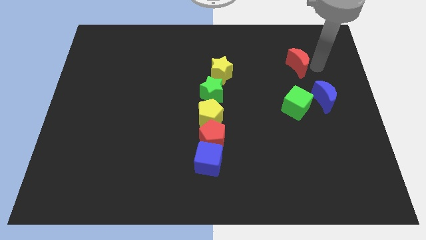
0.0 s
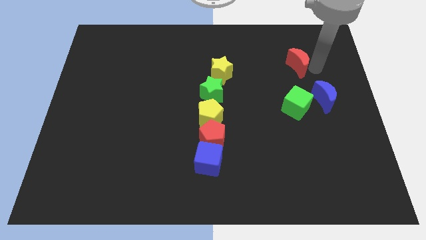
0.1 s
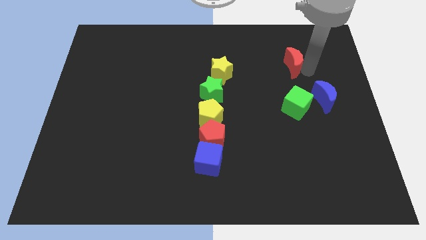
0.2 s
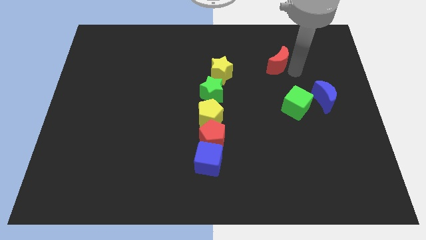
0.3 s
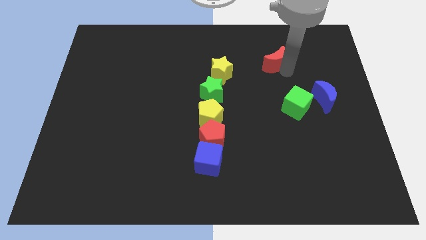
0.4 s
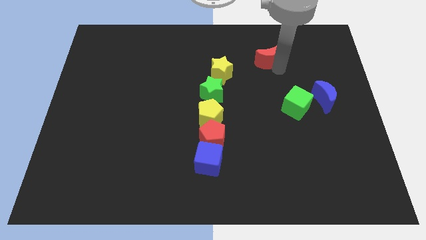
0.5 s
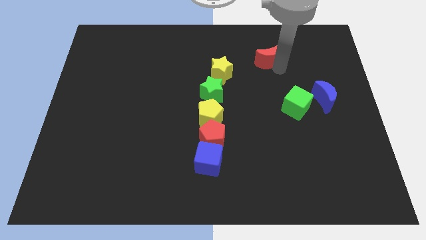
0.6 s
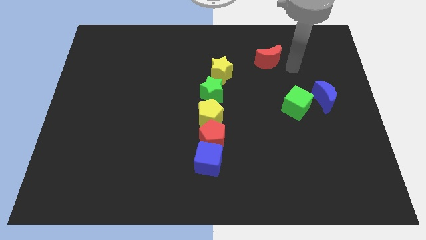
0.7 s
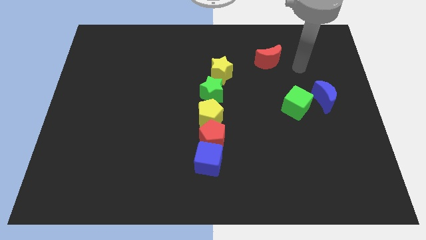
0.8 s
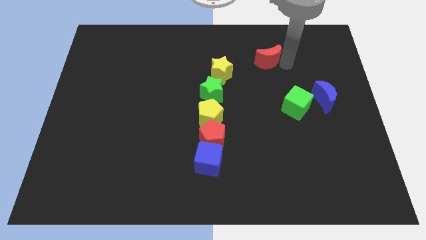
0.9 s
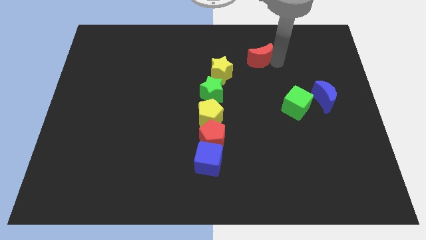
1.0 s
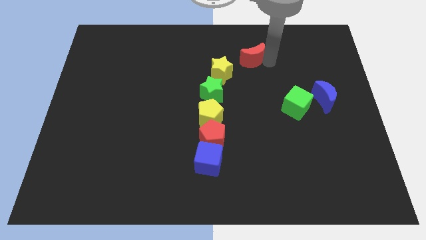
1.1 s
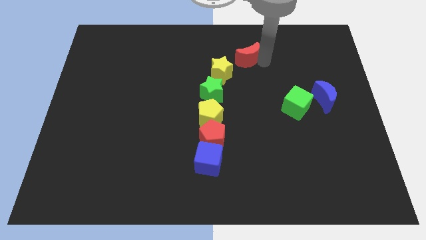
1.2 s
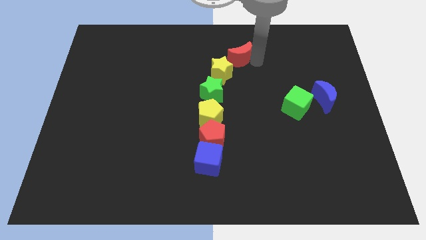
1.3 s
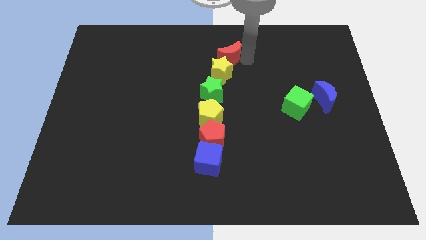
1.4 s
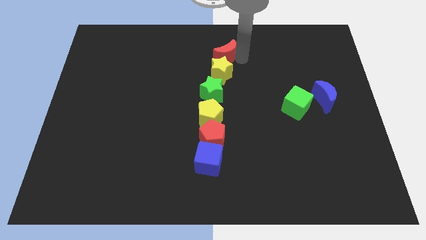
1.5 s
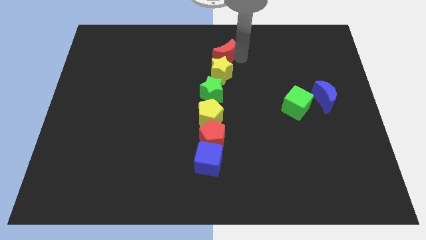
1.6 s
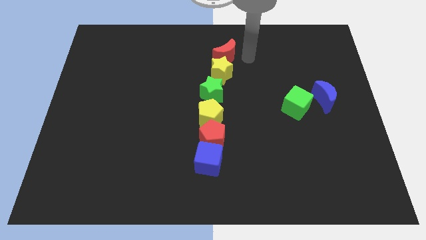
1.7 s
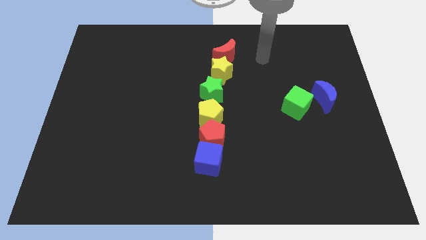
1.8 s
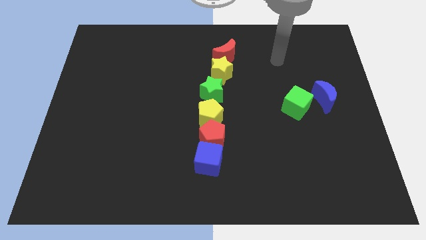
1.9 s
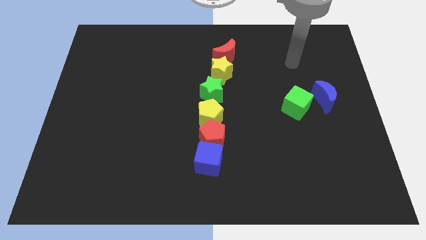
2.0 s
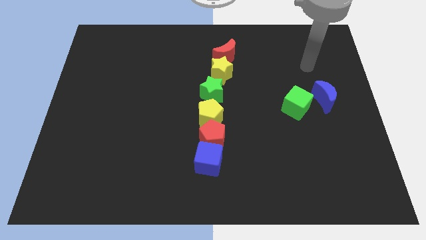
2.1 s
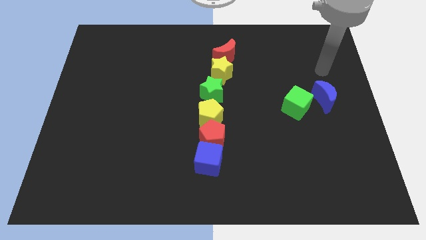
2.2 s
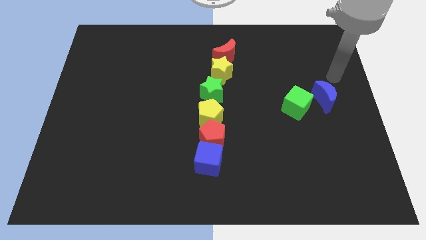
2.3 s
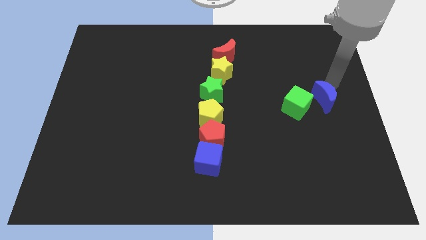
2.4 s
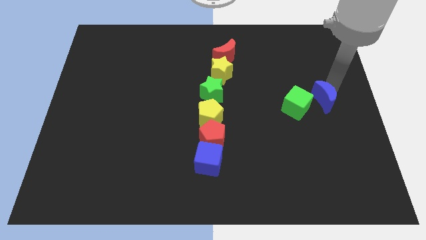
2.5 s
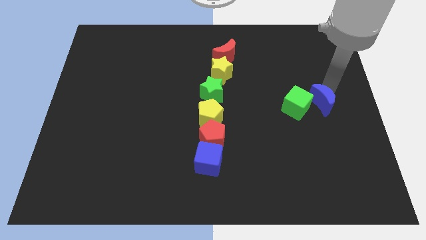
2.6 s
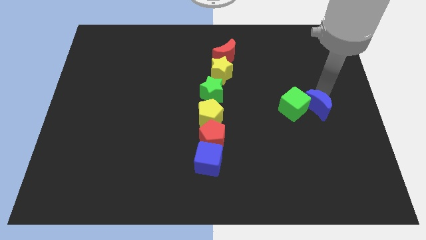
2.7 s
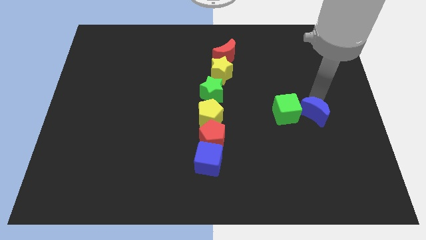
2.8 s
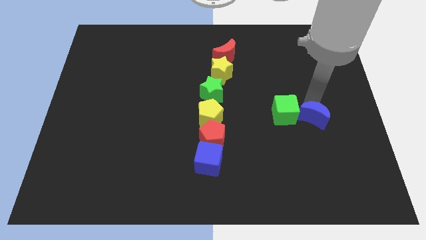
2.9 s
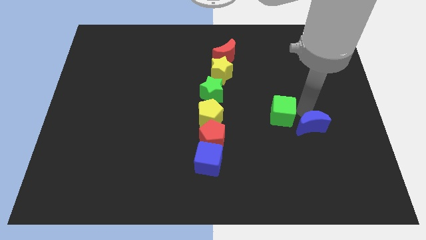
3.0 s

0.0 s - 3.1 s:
push red moon above yellow star

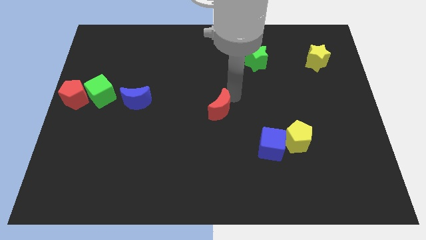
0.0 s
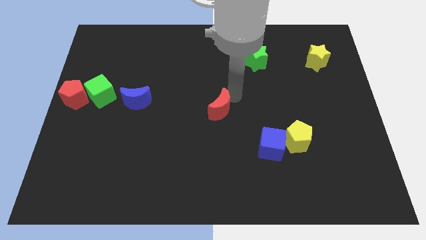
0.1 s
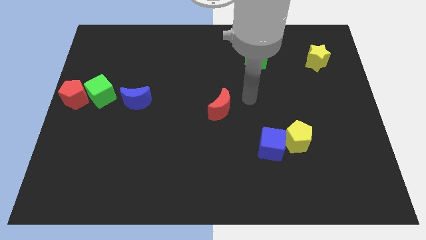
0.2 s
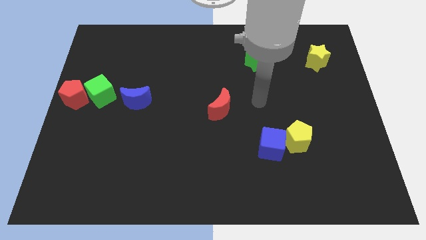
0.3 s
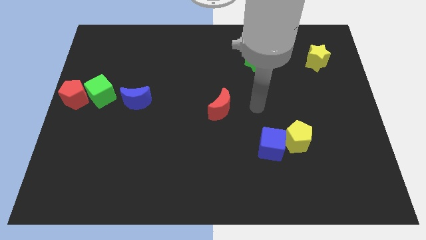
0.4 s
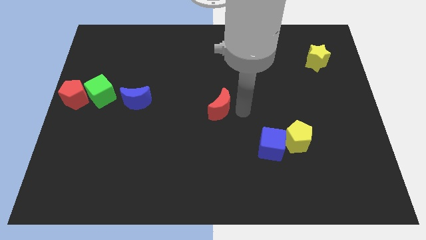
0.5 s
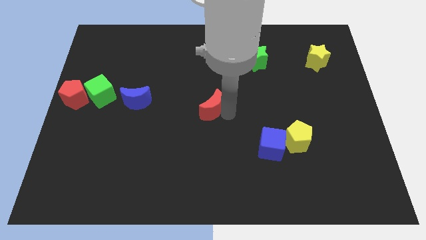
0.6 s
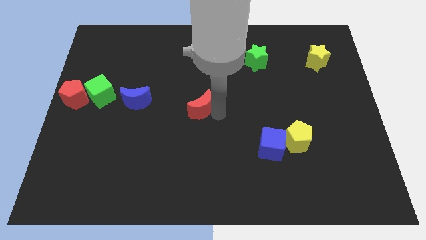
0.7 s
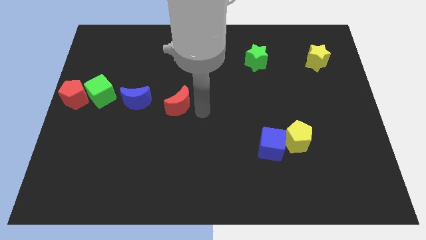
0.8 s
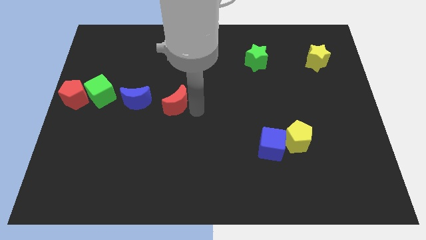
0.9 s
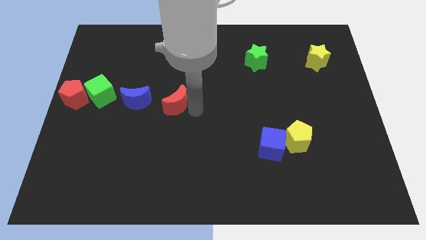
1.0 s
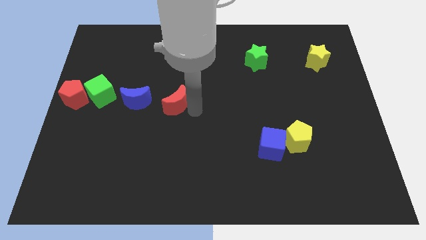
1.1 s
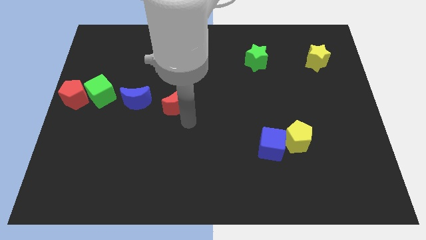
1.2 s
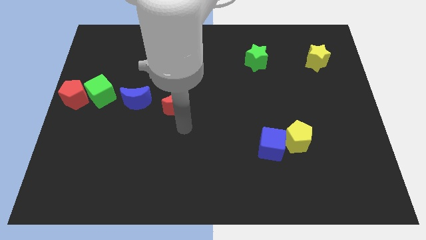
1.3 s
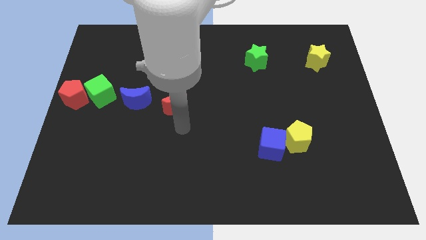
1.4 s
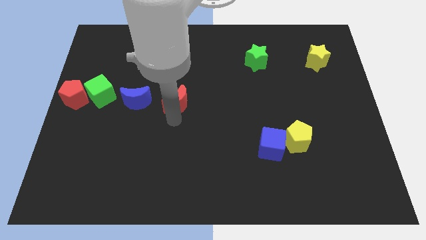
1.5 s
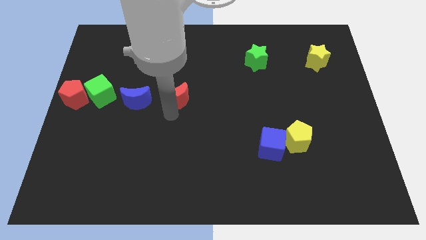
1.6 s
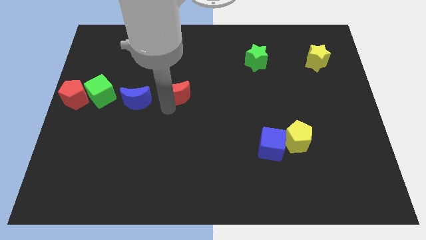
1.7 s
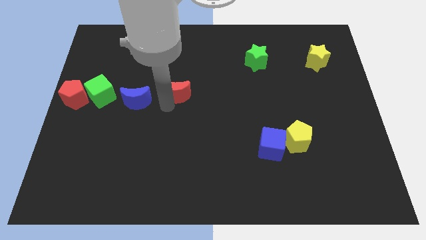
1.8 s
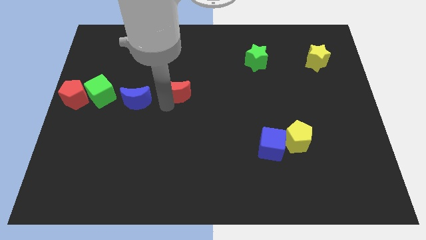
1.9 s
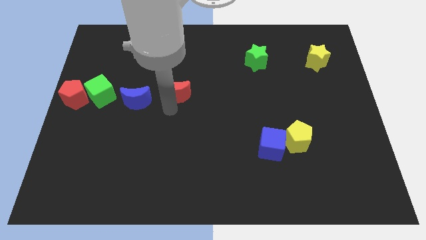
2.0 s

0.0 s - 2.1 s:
place red crescent beside blue crescent

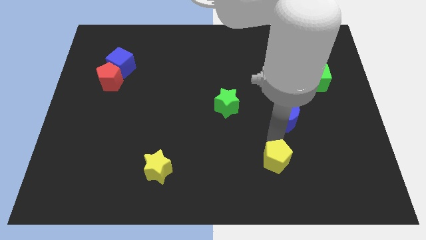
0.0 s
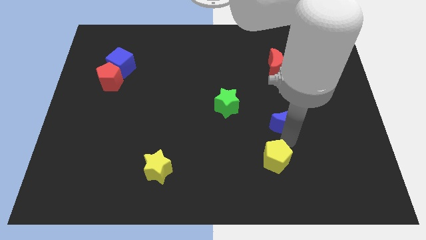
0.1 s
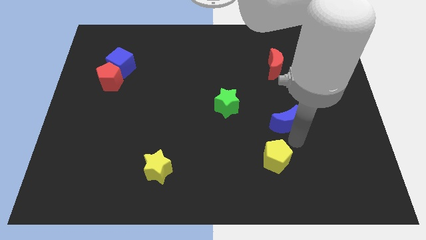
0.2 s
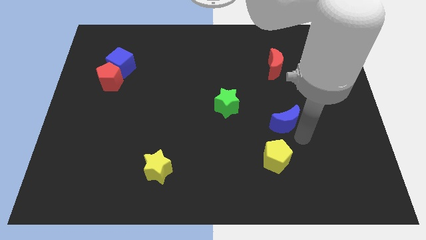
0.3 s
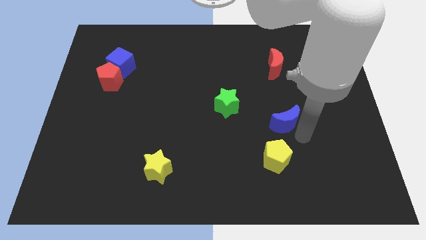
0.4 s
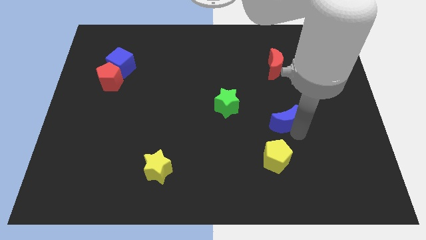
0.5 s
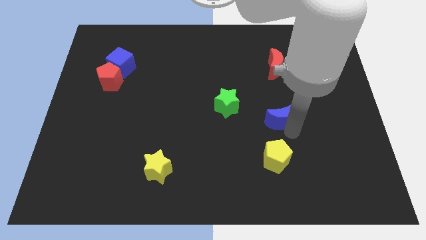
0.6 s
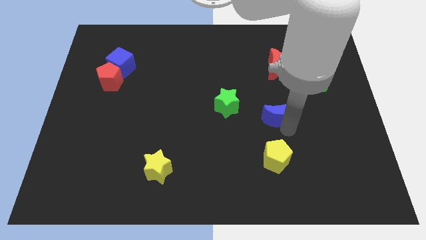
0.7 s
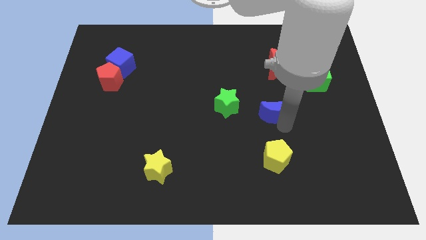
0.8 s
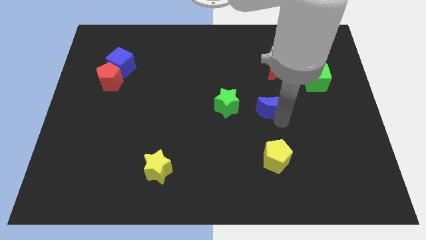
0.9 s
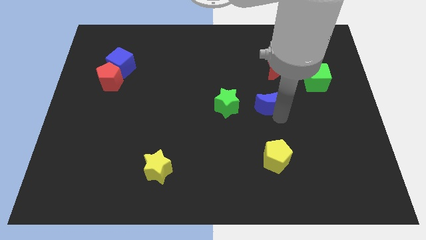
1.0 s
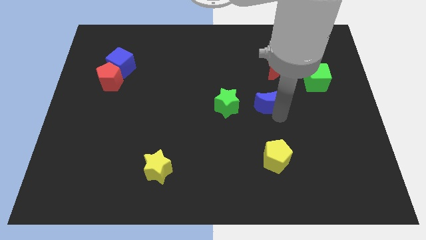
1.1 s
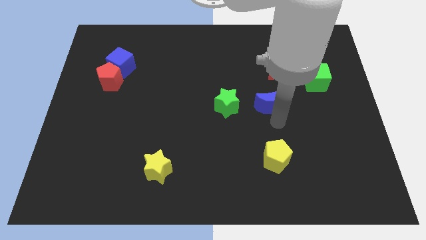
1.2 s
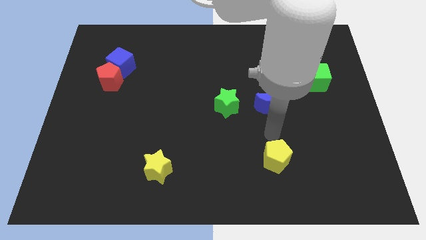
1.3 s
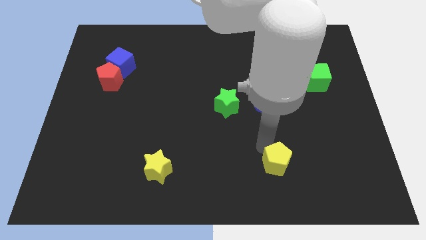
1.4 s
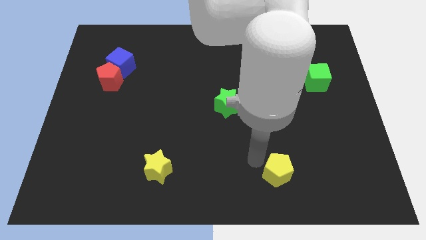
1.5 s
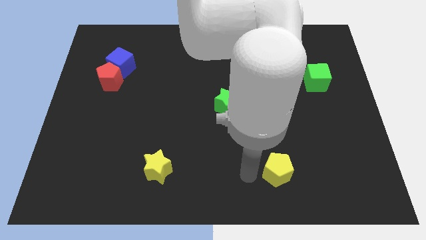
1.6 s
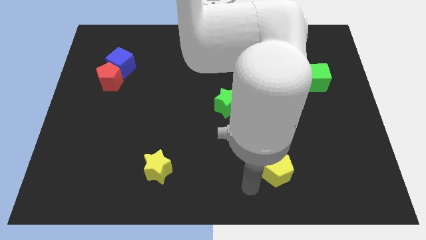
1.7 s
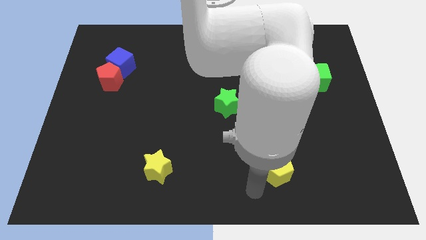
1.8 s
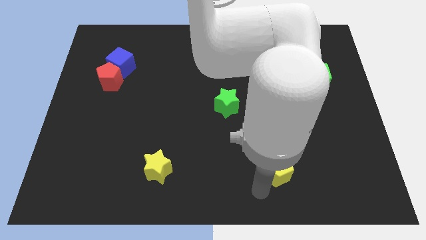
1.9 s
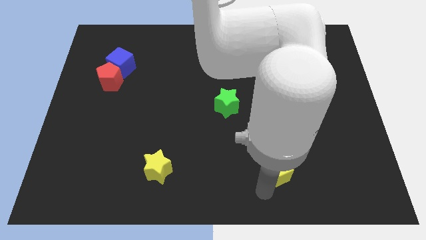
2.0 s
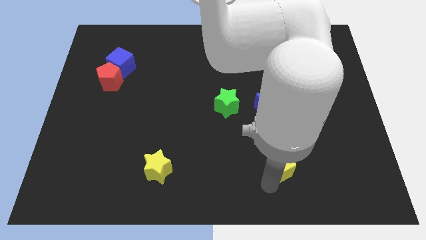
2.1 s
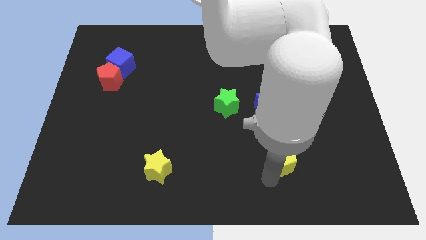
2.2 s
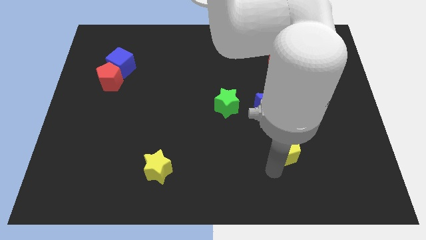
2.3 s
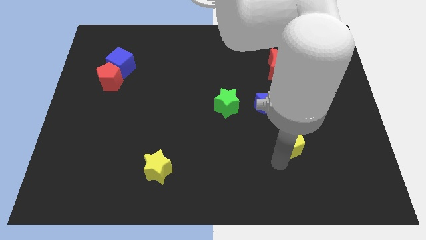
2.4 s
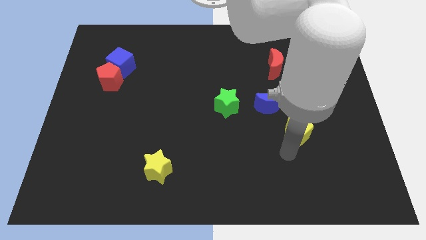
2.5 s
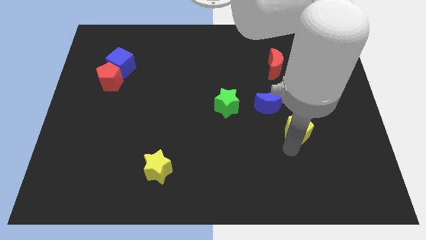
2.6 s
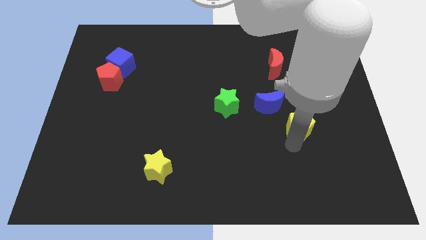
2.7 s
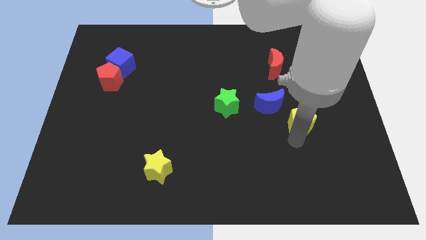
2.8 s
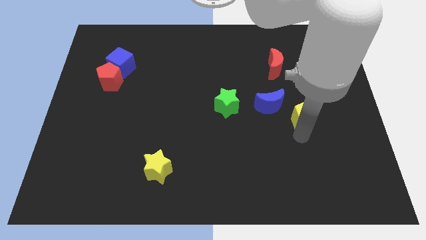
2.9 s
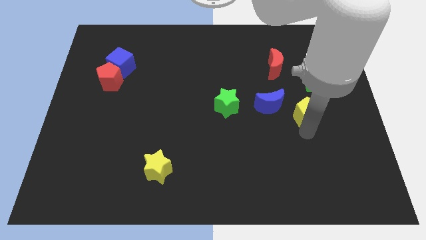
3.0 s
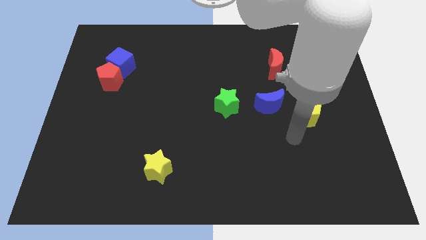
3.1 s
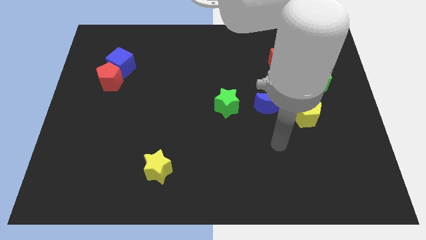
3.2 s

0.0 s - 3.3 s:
push yellow pentagon below green cube

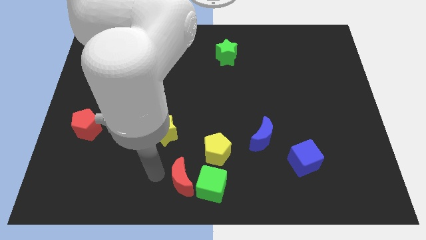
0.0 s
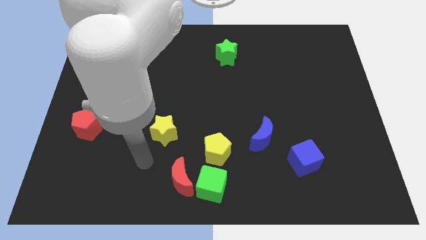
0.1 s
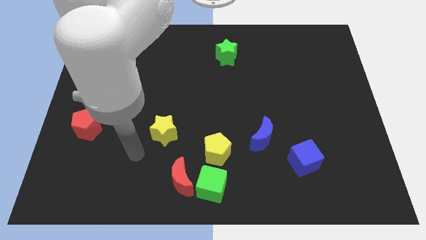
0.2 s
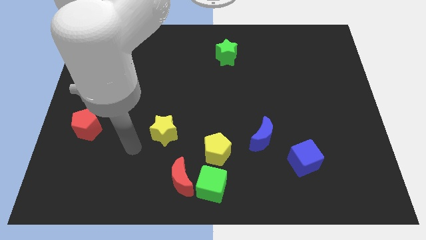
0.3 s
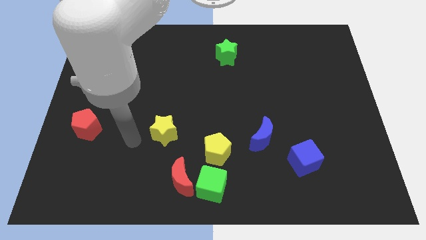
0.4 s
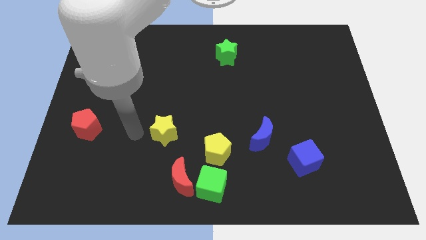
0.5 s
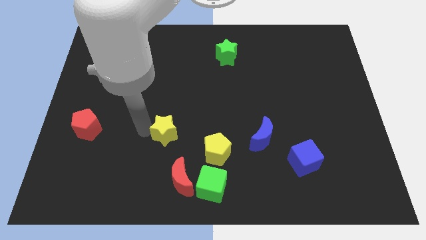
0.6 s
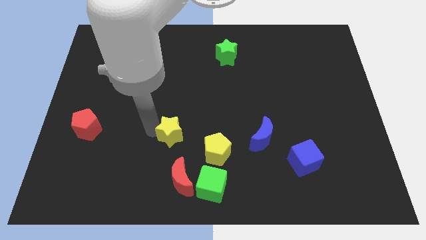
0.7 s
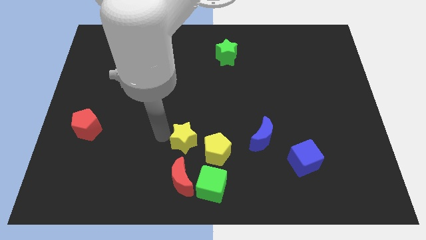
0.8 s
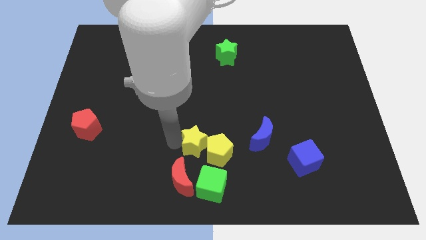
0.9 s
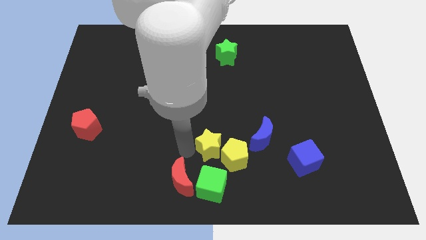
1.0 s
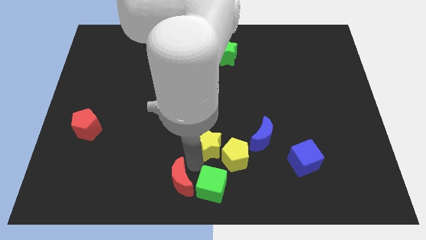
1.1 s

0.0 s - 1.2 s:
push the yellow star into yellow pentagon
